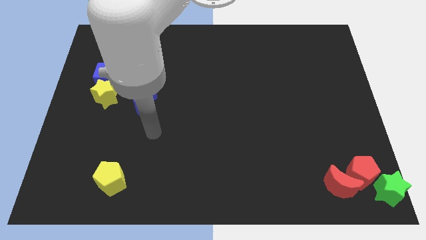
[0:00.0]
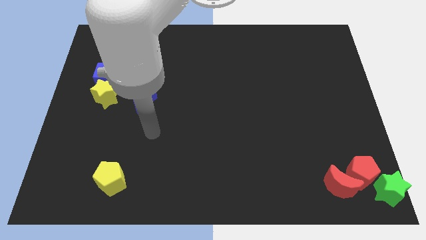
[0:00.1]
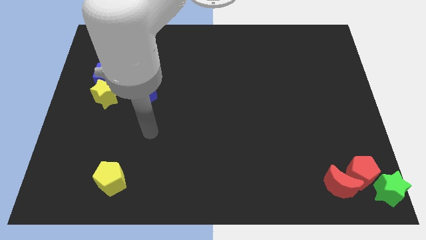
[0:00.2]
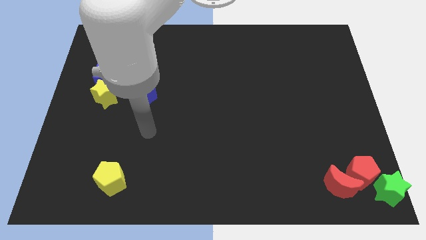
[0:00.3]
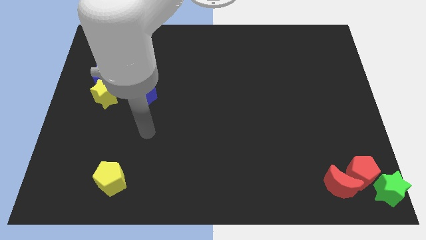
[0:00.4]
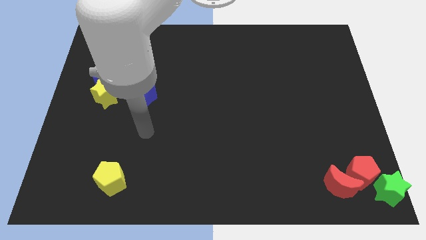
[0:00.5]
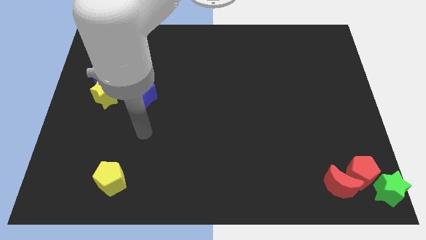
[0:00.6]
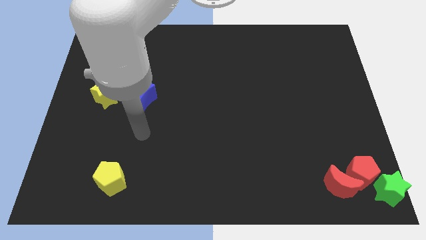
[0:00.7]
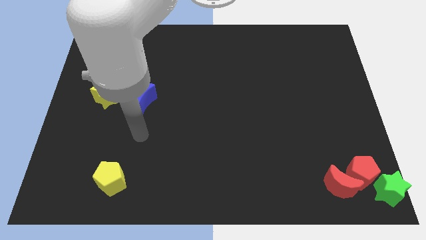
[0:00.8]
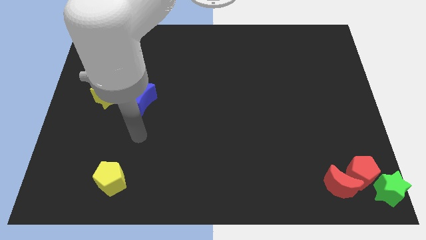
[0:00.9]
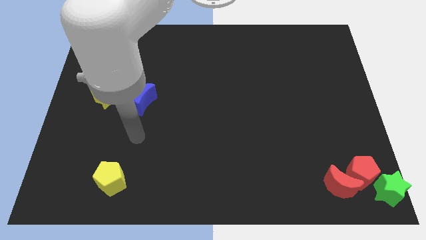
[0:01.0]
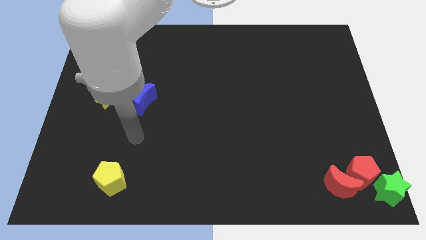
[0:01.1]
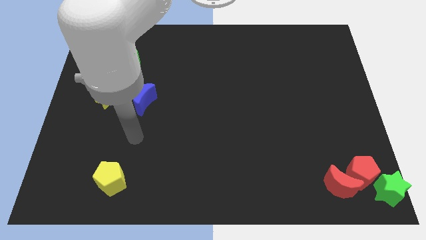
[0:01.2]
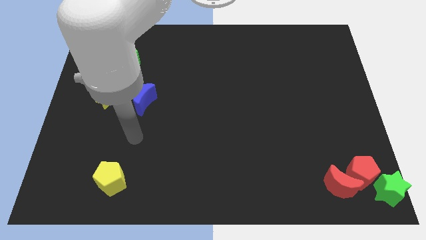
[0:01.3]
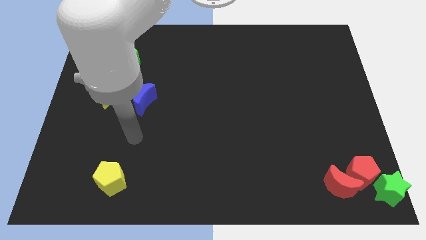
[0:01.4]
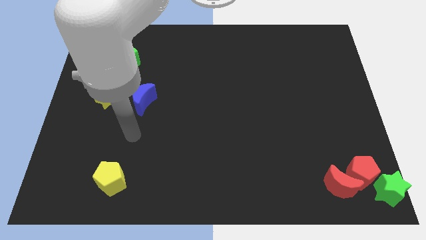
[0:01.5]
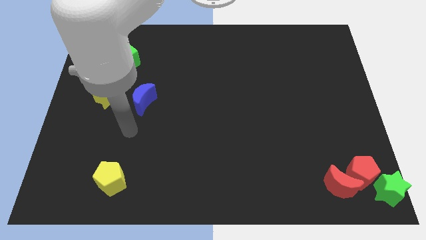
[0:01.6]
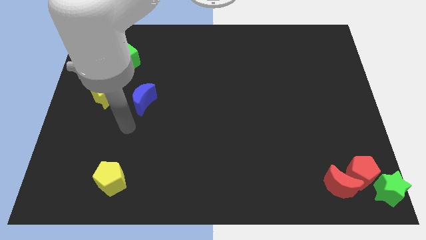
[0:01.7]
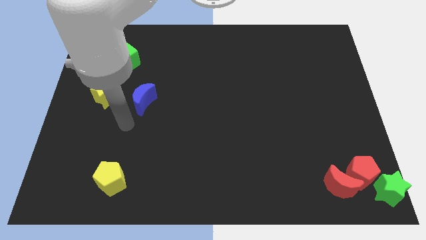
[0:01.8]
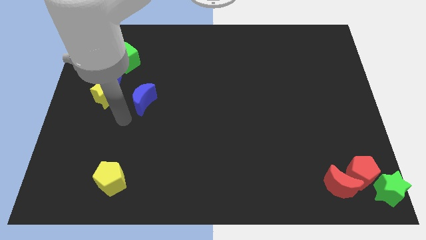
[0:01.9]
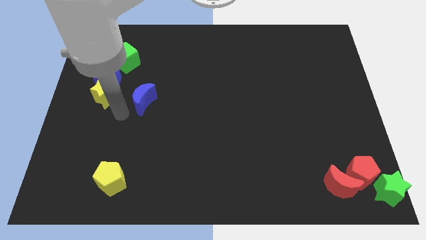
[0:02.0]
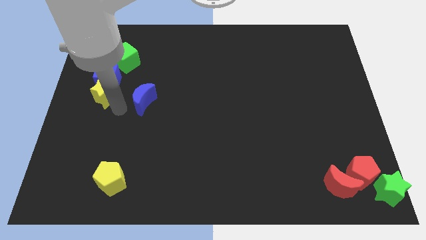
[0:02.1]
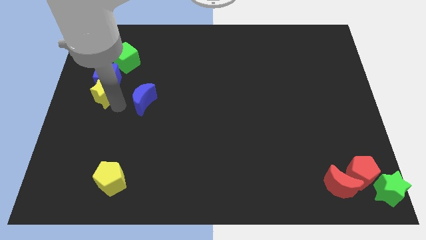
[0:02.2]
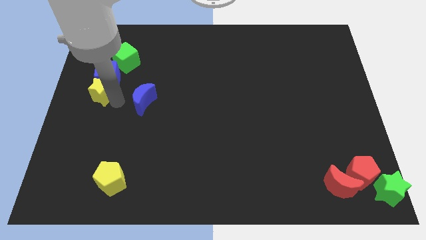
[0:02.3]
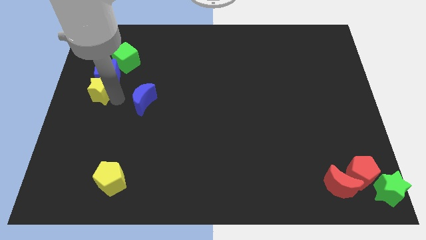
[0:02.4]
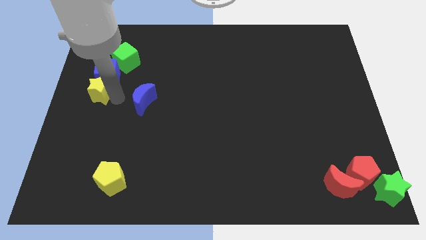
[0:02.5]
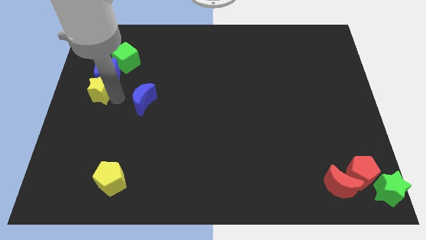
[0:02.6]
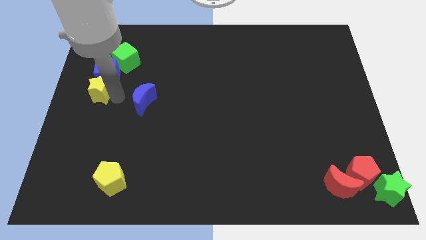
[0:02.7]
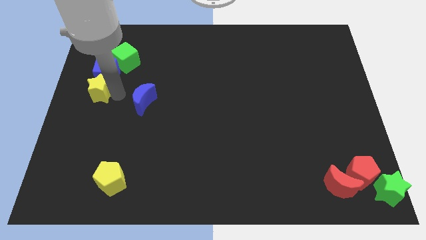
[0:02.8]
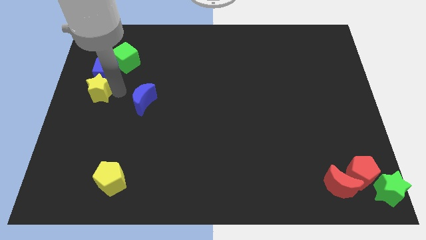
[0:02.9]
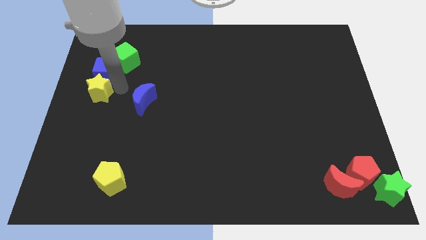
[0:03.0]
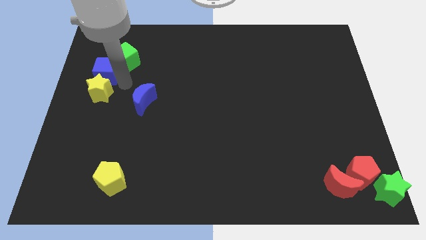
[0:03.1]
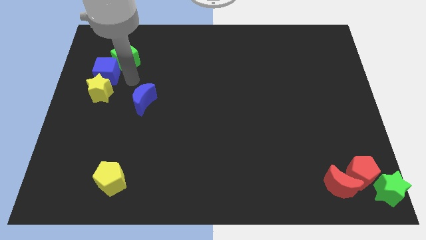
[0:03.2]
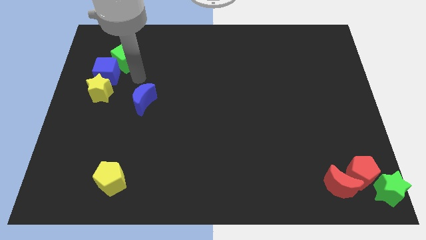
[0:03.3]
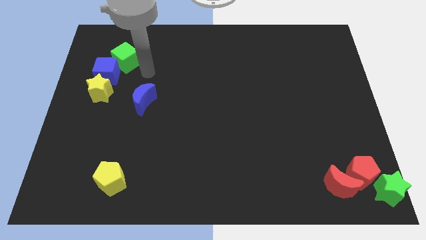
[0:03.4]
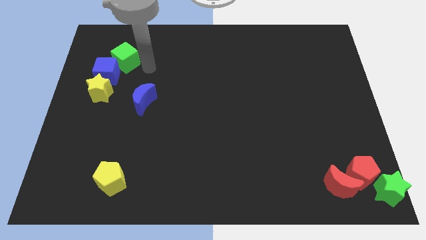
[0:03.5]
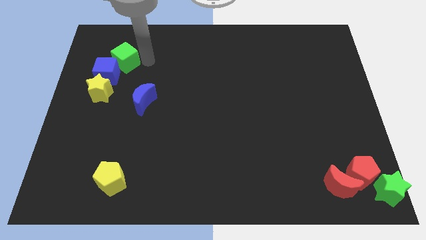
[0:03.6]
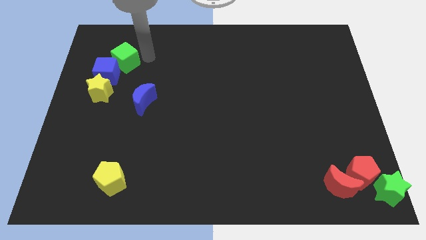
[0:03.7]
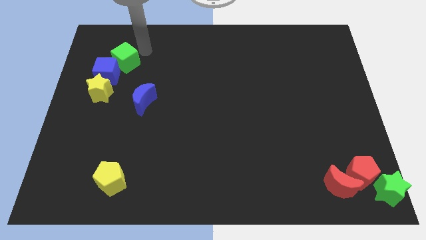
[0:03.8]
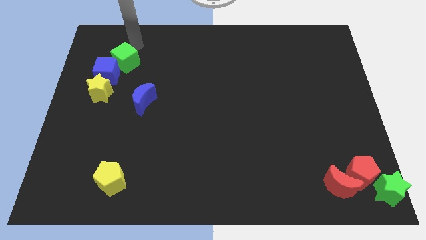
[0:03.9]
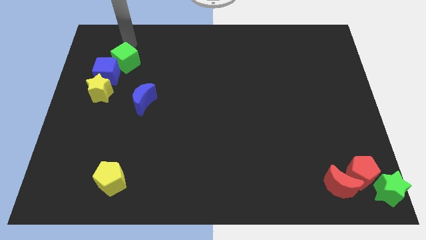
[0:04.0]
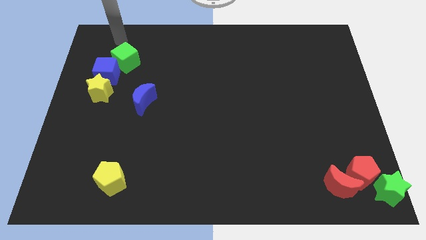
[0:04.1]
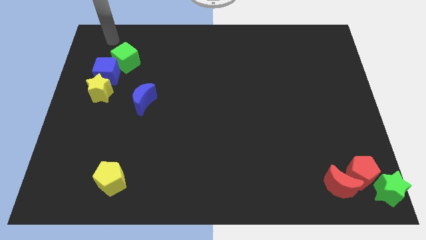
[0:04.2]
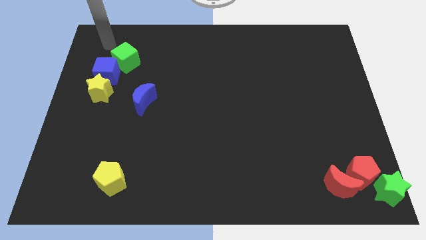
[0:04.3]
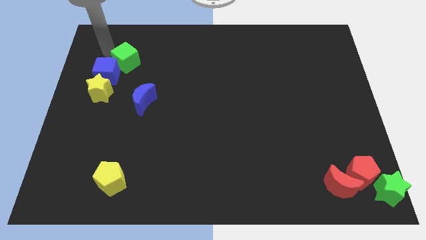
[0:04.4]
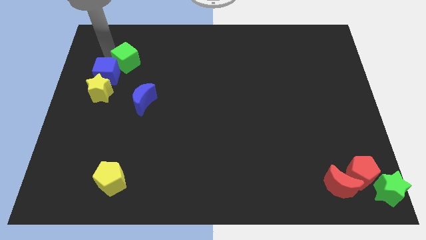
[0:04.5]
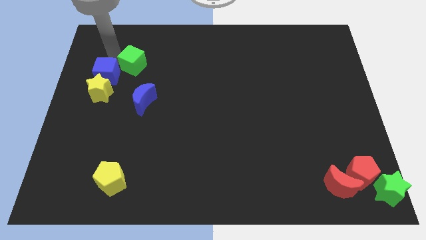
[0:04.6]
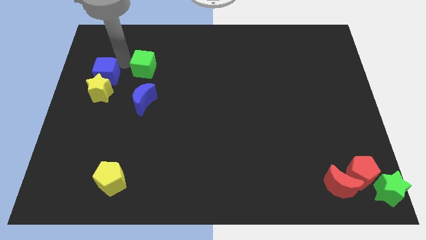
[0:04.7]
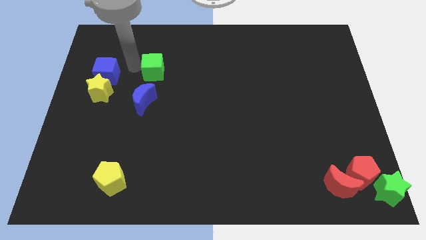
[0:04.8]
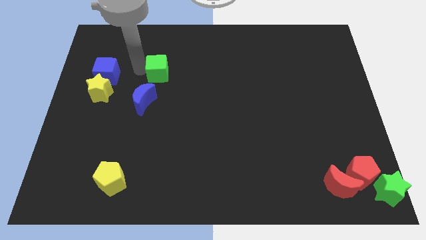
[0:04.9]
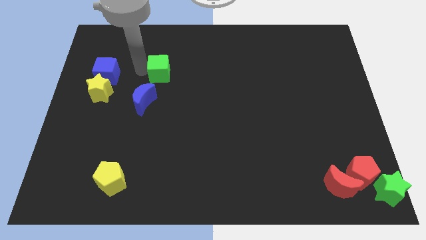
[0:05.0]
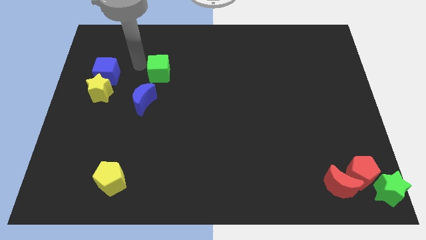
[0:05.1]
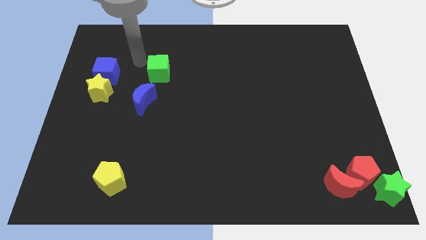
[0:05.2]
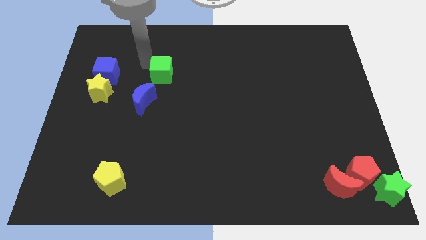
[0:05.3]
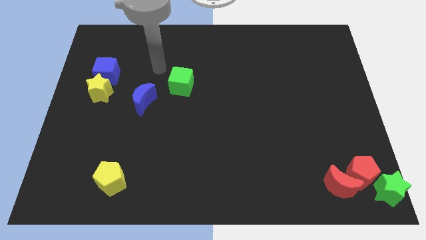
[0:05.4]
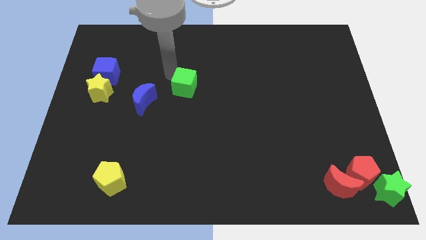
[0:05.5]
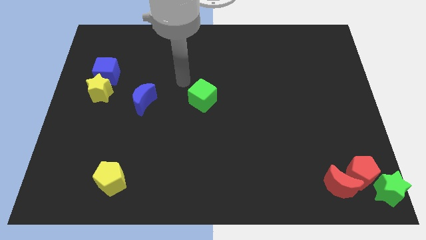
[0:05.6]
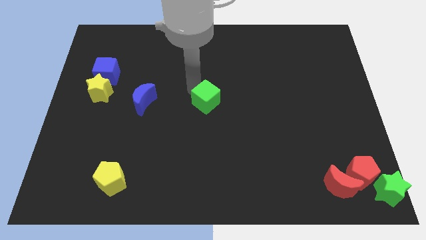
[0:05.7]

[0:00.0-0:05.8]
put the green cube to the right of the blue crescent

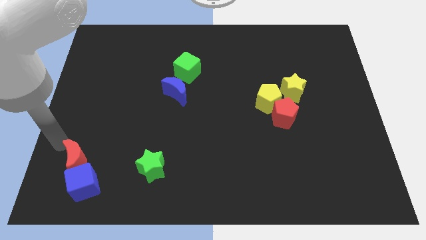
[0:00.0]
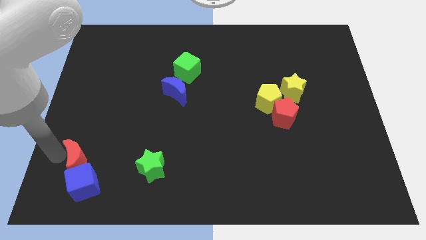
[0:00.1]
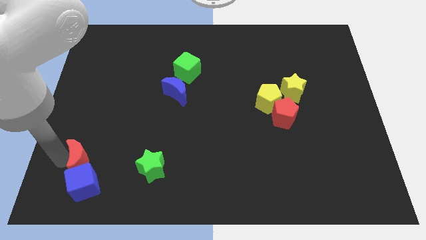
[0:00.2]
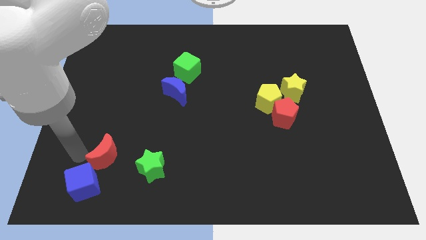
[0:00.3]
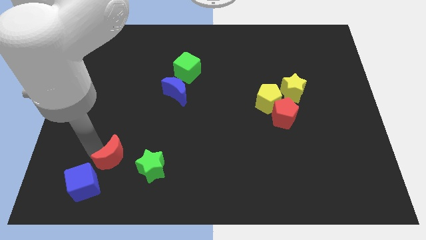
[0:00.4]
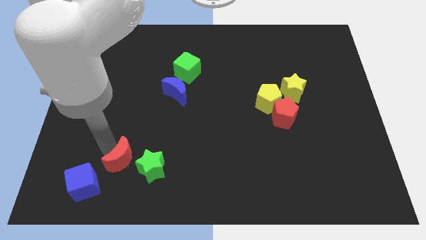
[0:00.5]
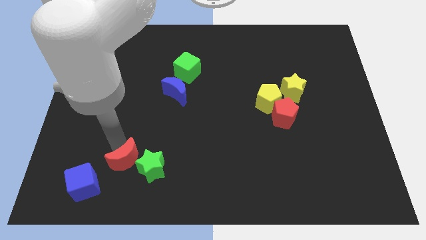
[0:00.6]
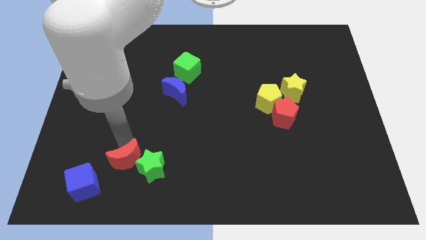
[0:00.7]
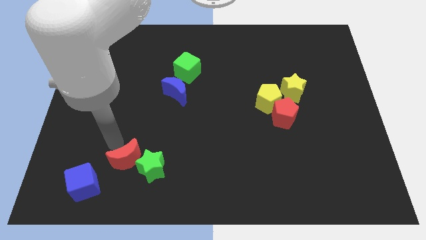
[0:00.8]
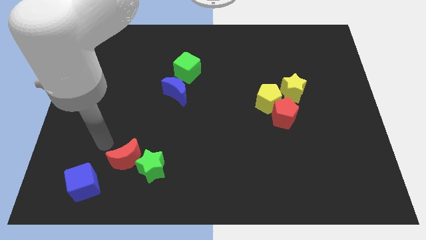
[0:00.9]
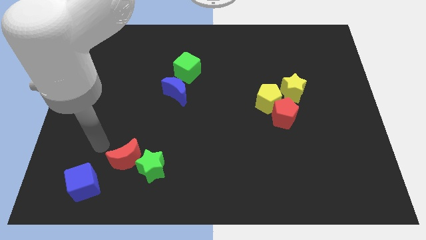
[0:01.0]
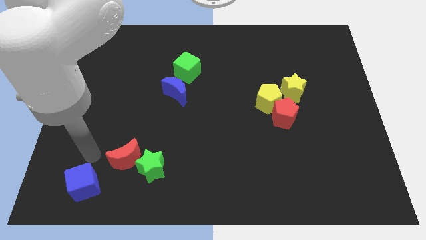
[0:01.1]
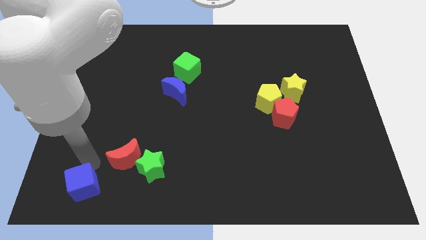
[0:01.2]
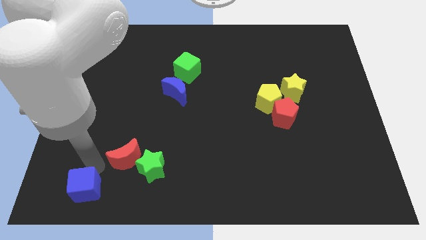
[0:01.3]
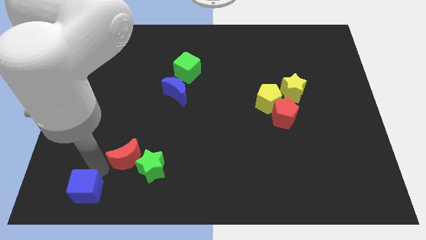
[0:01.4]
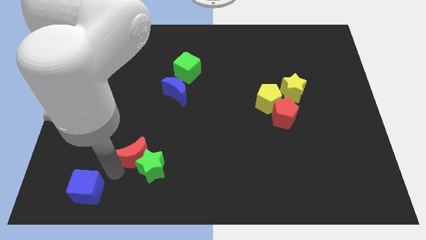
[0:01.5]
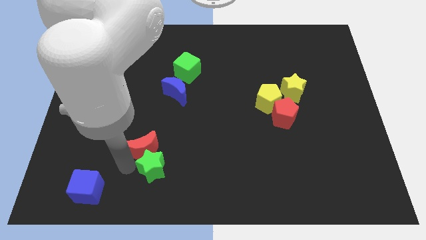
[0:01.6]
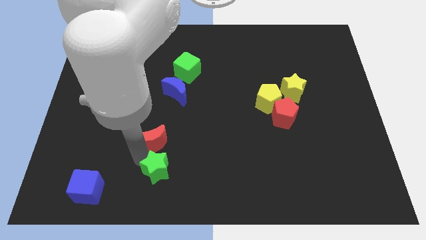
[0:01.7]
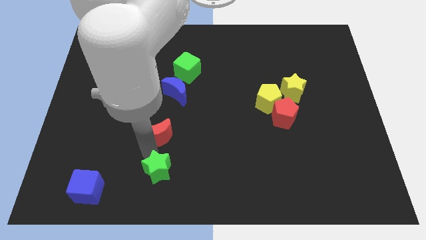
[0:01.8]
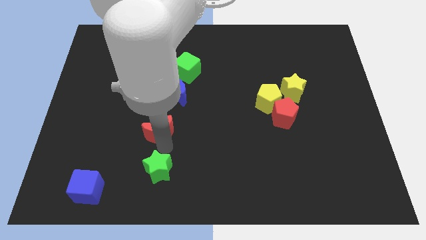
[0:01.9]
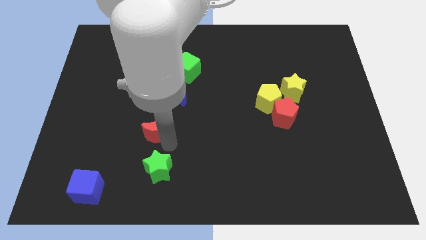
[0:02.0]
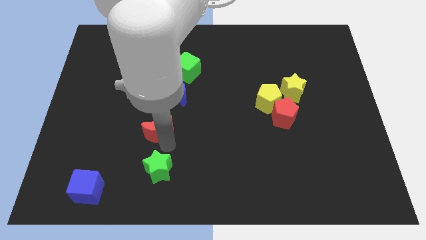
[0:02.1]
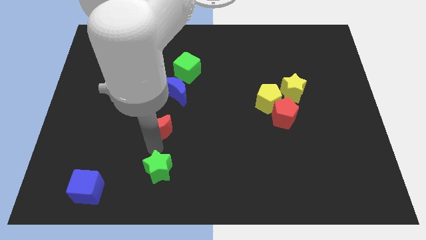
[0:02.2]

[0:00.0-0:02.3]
move the red crescent above the green star

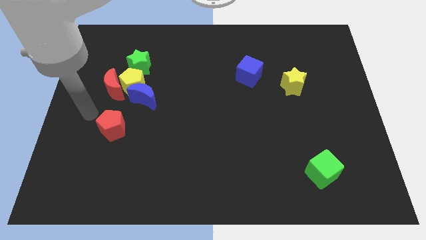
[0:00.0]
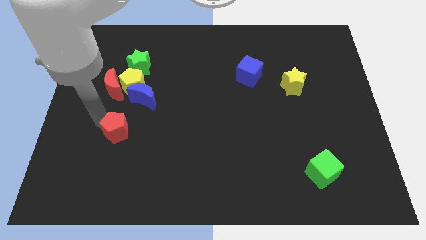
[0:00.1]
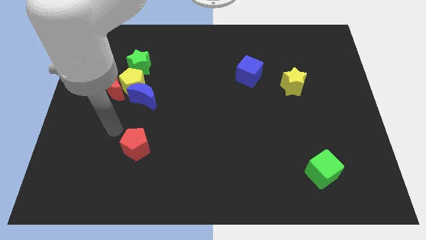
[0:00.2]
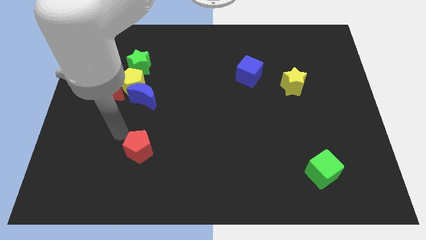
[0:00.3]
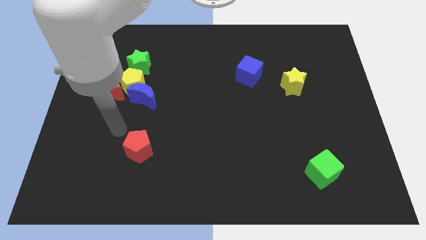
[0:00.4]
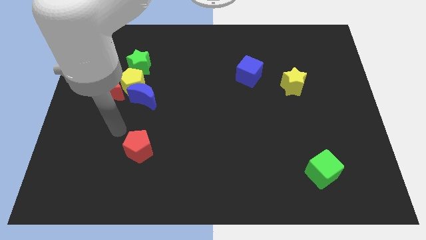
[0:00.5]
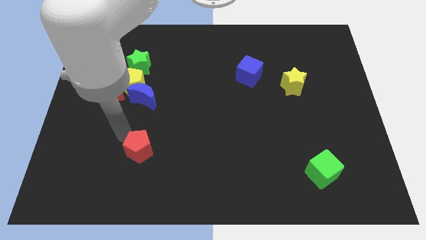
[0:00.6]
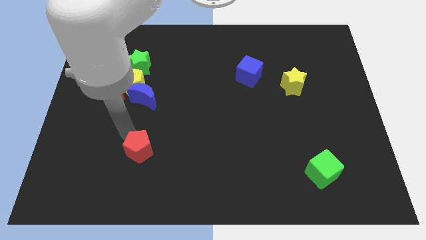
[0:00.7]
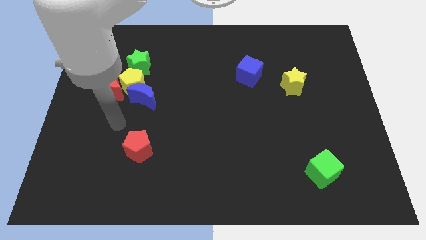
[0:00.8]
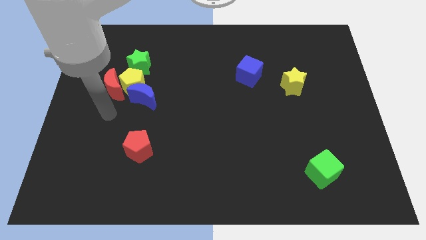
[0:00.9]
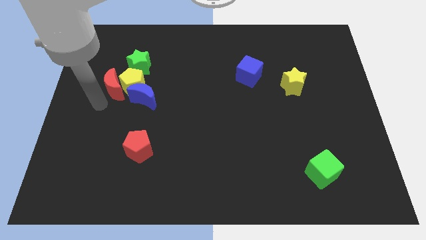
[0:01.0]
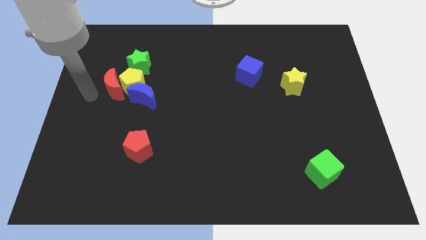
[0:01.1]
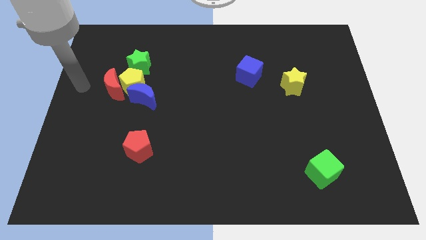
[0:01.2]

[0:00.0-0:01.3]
move the red pentagon to the bottom of the board
